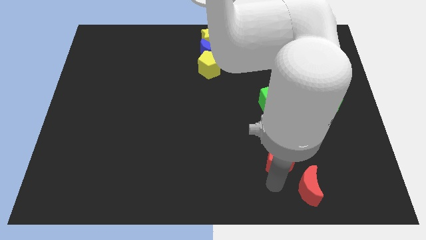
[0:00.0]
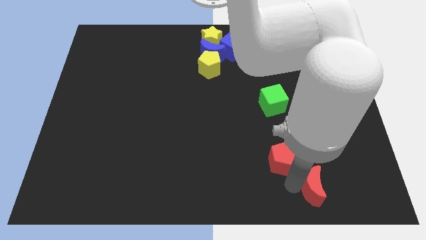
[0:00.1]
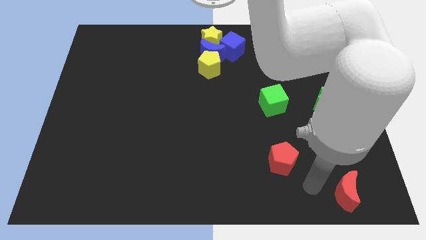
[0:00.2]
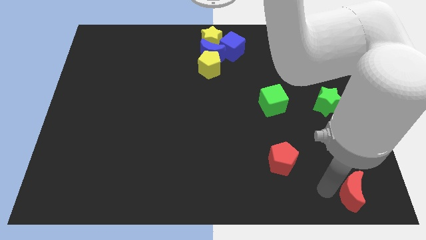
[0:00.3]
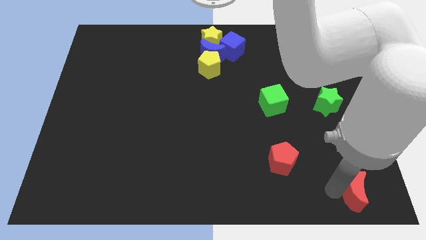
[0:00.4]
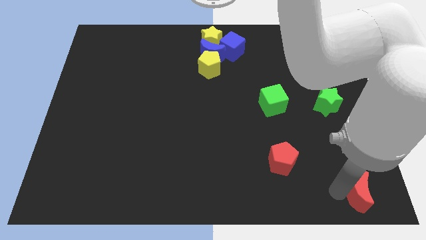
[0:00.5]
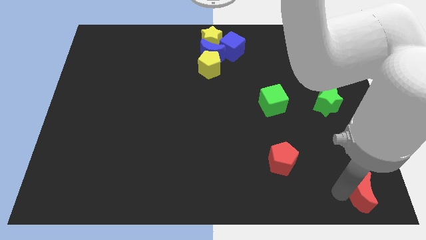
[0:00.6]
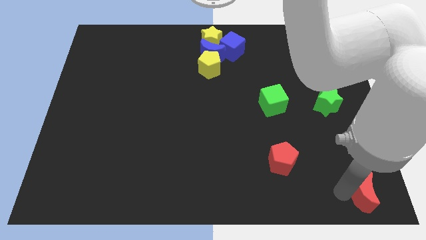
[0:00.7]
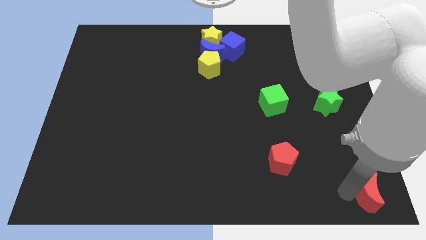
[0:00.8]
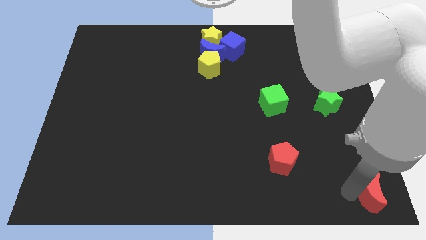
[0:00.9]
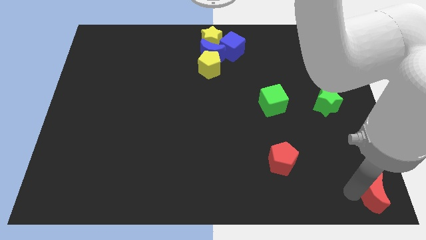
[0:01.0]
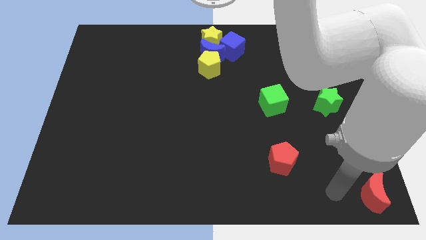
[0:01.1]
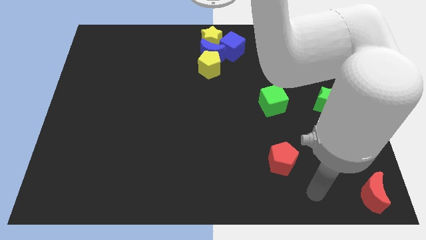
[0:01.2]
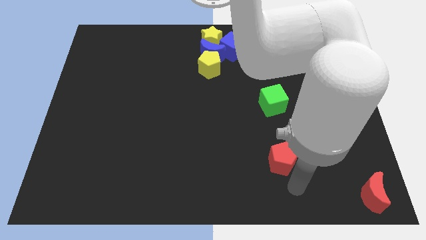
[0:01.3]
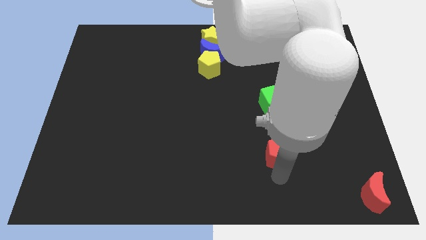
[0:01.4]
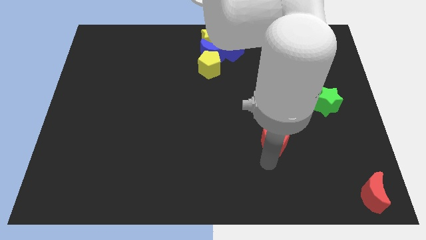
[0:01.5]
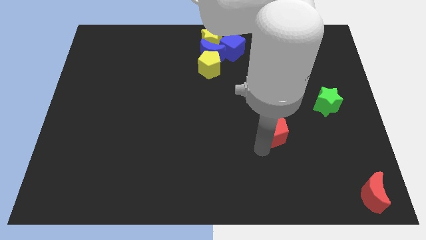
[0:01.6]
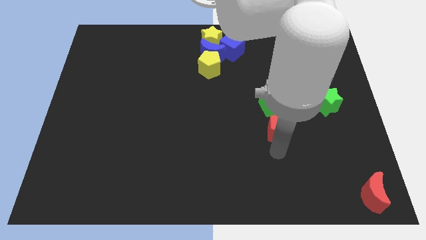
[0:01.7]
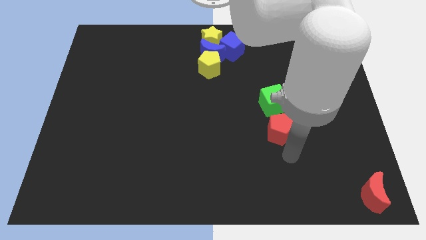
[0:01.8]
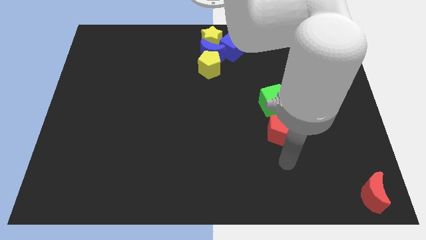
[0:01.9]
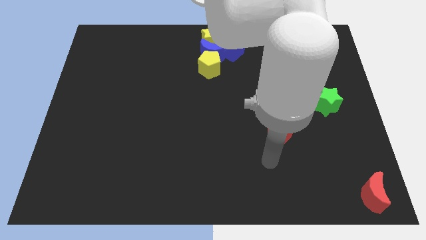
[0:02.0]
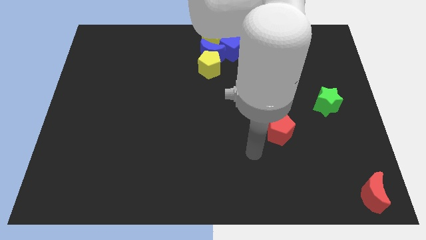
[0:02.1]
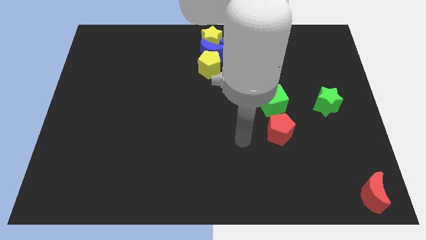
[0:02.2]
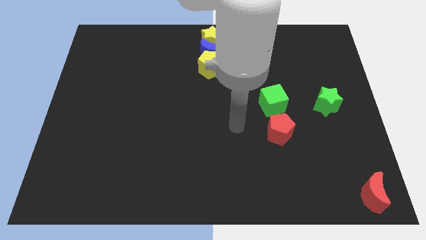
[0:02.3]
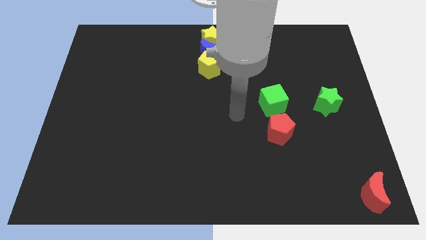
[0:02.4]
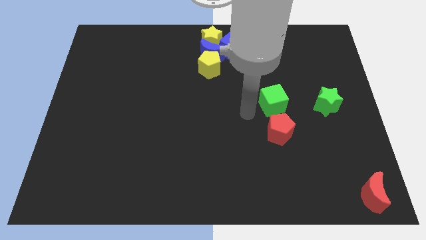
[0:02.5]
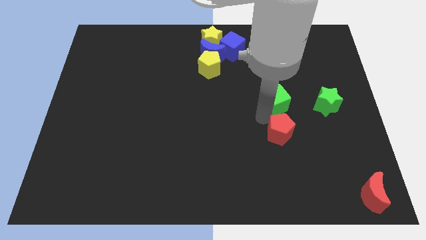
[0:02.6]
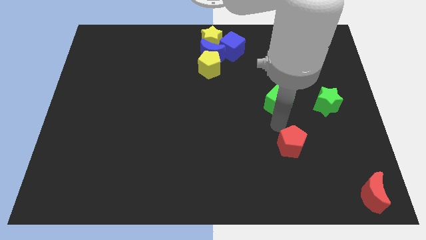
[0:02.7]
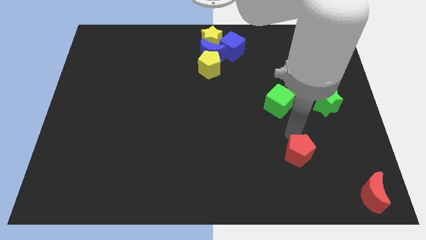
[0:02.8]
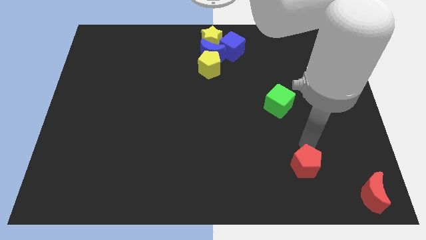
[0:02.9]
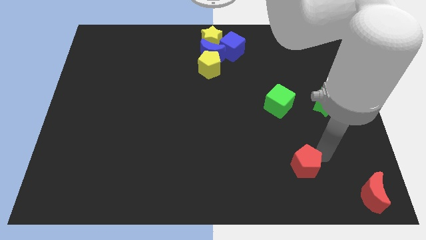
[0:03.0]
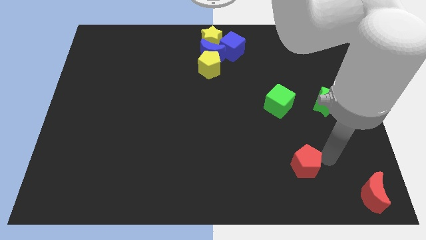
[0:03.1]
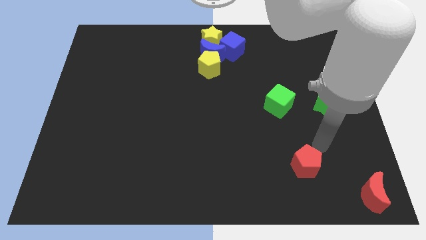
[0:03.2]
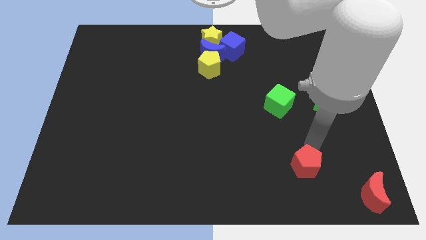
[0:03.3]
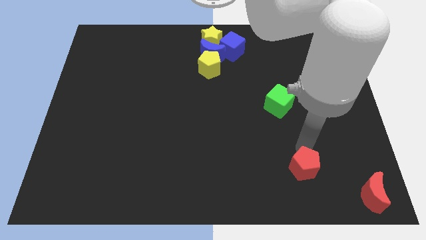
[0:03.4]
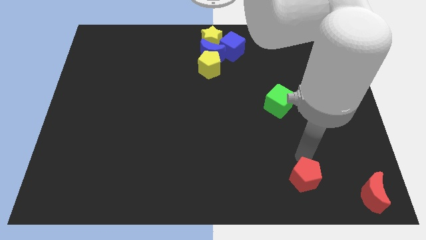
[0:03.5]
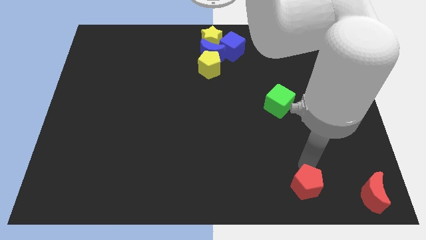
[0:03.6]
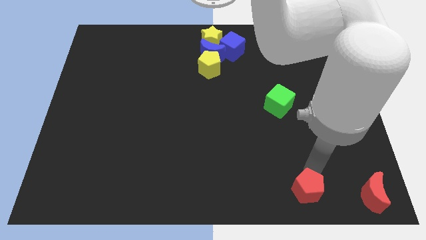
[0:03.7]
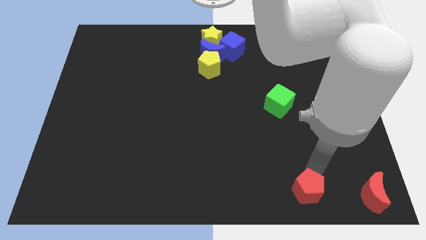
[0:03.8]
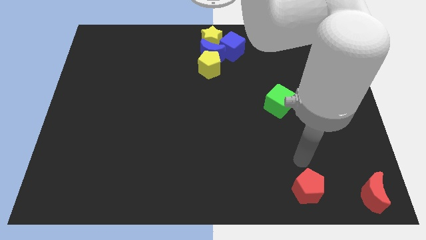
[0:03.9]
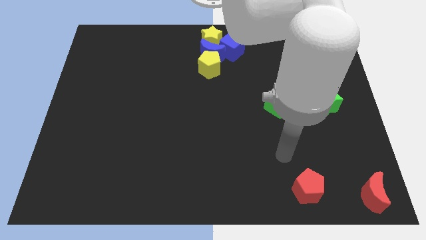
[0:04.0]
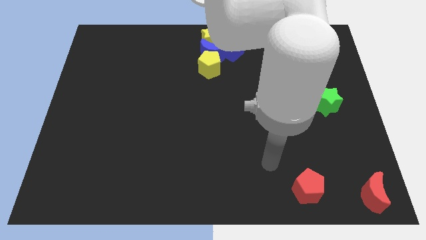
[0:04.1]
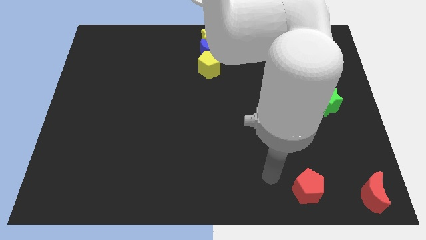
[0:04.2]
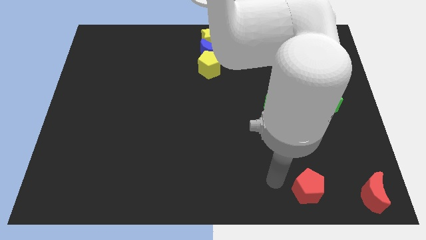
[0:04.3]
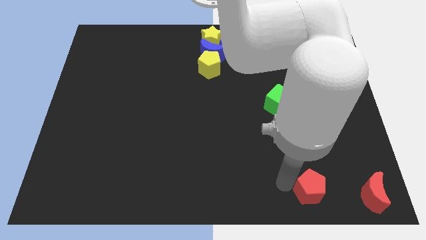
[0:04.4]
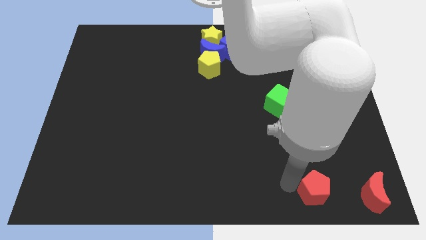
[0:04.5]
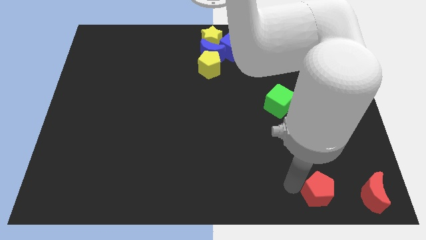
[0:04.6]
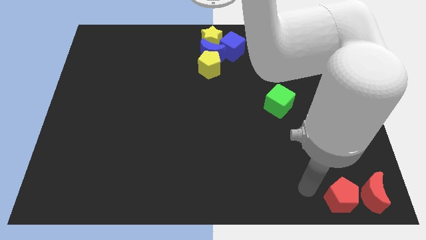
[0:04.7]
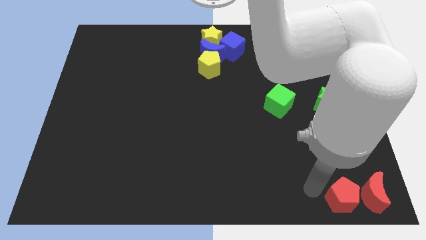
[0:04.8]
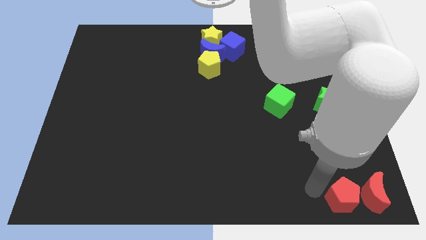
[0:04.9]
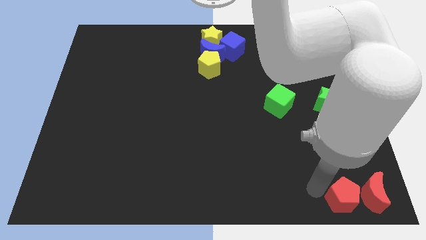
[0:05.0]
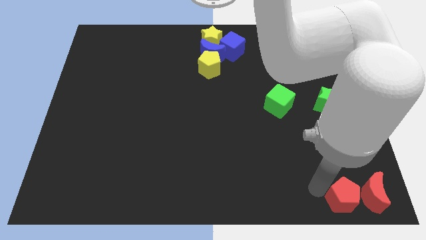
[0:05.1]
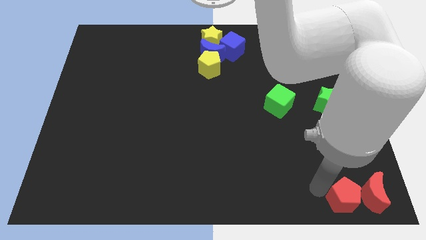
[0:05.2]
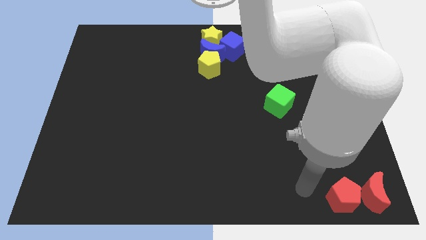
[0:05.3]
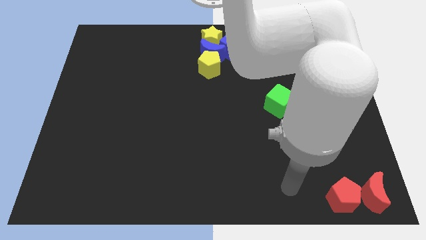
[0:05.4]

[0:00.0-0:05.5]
put the red blocks at the bottom right side of the board

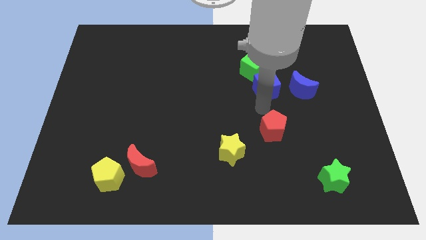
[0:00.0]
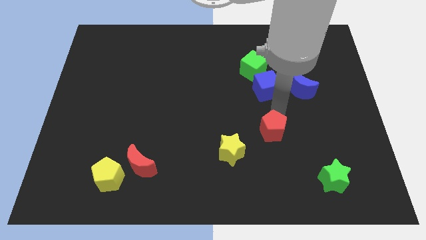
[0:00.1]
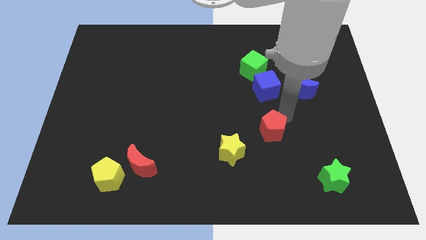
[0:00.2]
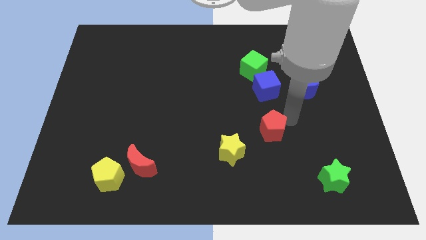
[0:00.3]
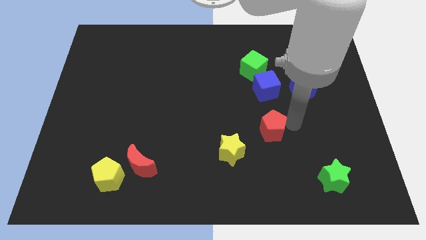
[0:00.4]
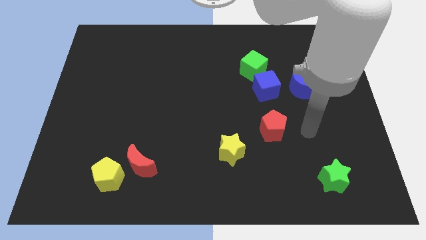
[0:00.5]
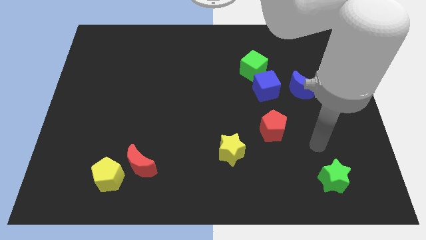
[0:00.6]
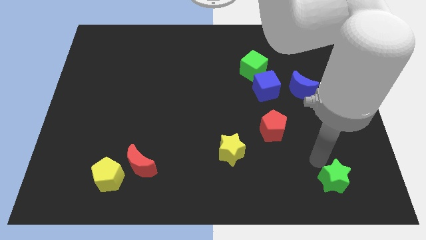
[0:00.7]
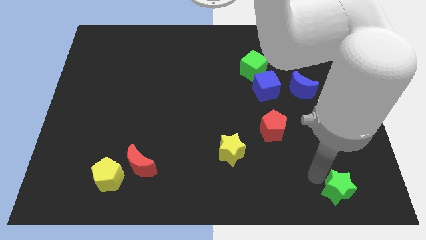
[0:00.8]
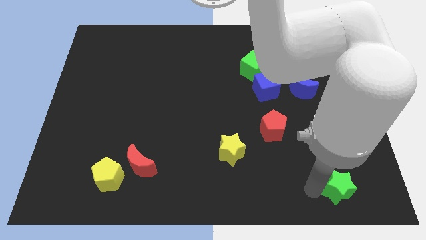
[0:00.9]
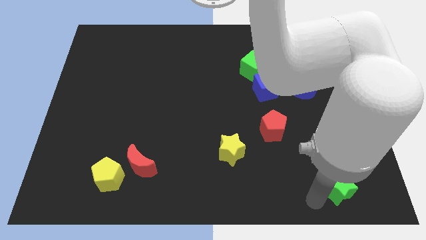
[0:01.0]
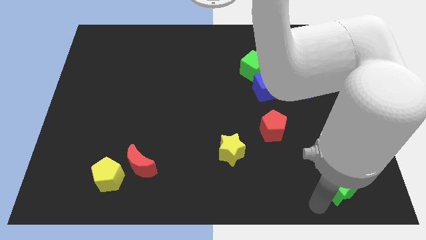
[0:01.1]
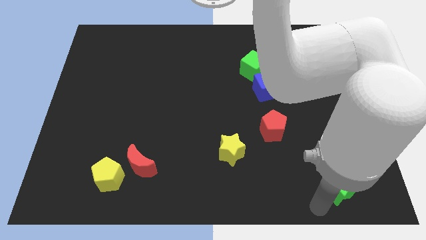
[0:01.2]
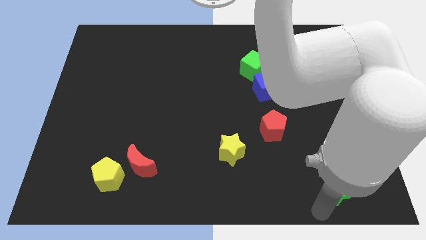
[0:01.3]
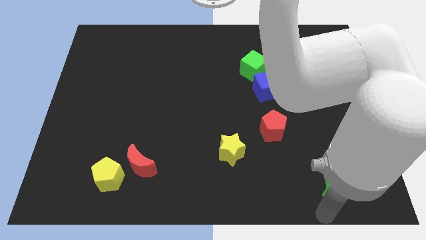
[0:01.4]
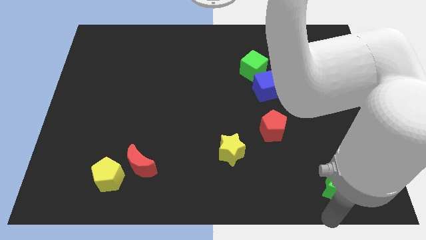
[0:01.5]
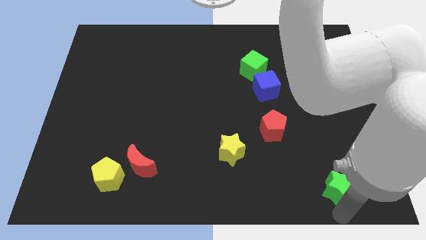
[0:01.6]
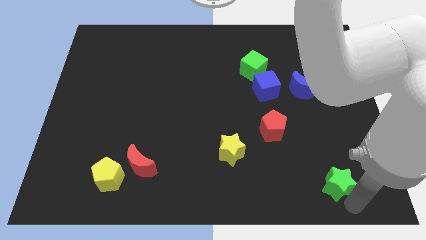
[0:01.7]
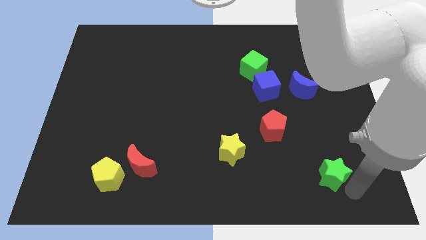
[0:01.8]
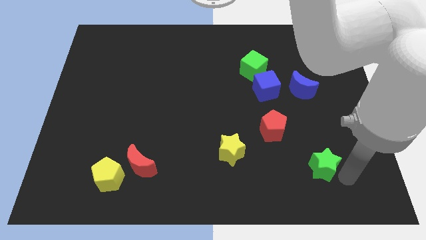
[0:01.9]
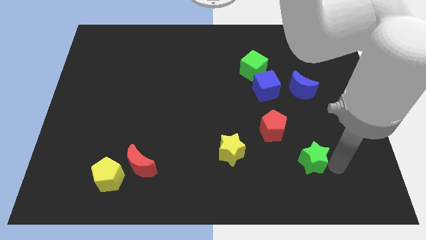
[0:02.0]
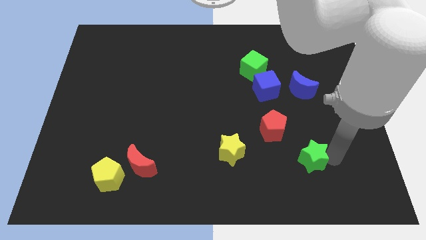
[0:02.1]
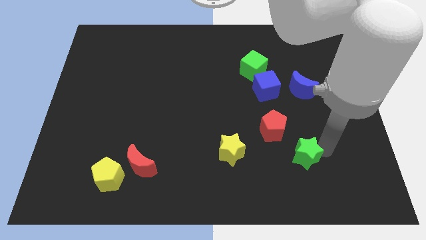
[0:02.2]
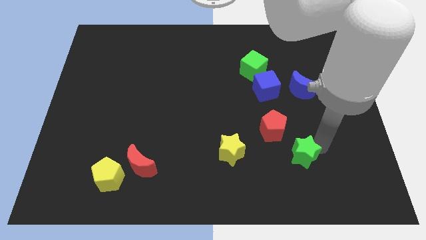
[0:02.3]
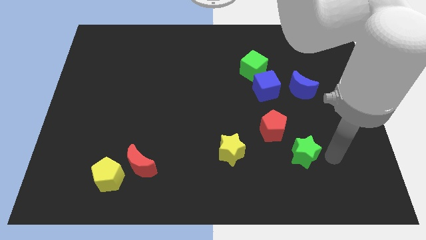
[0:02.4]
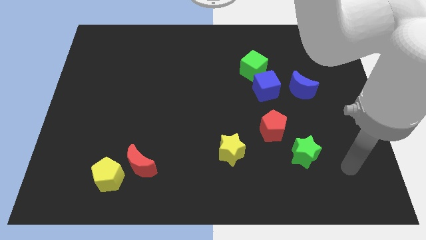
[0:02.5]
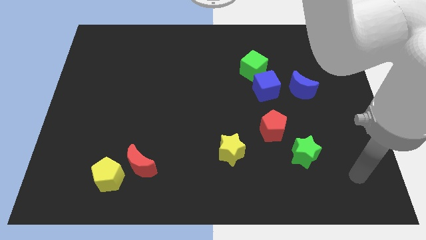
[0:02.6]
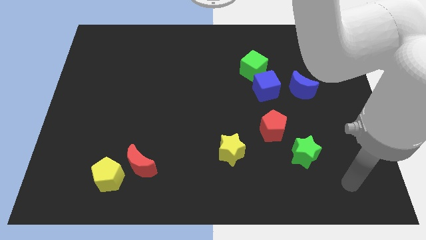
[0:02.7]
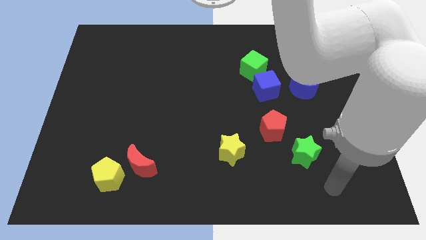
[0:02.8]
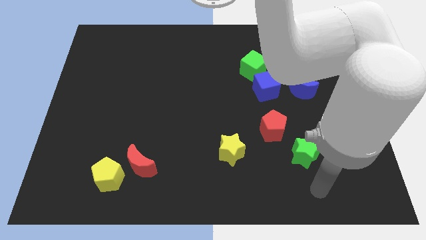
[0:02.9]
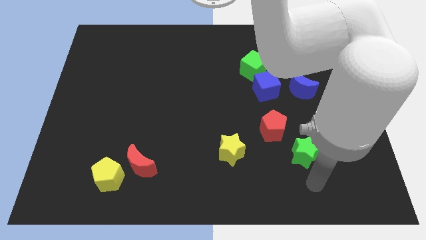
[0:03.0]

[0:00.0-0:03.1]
place the green star horizontally right to the yellow star

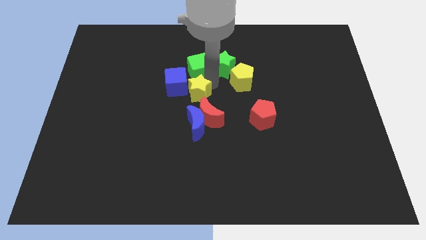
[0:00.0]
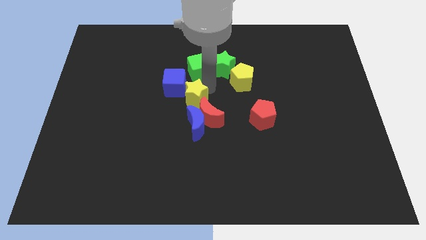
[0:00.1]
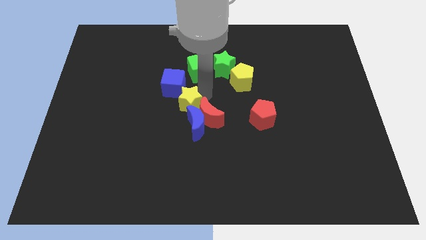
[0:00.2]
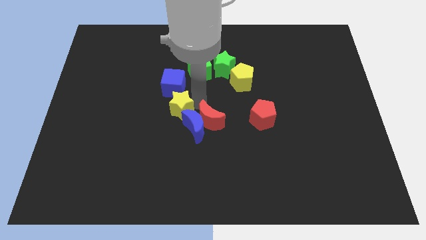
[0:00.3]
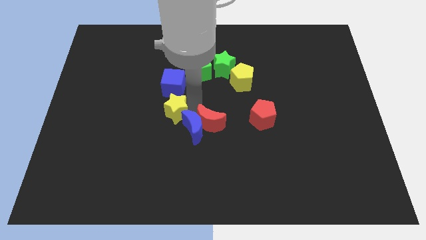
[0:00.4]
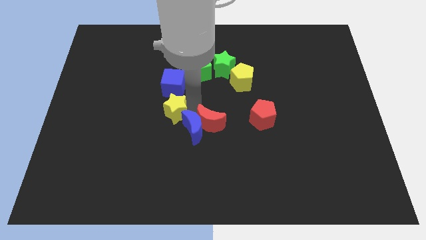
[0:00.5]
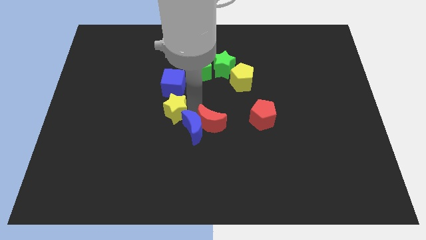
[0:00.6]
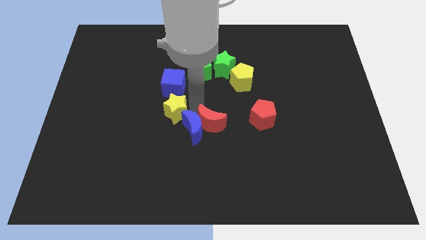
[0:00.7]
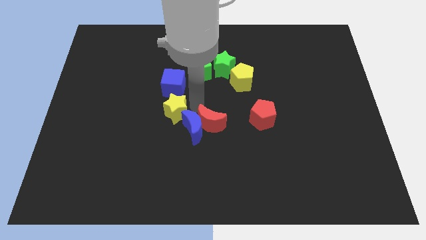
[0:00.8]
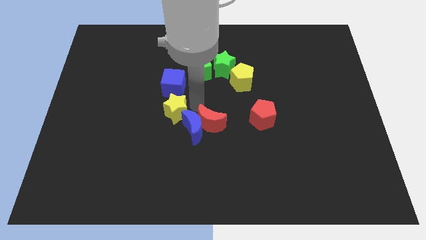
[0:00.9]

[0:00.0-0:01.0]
move yellow star diagonally above the blue moon
